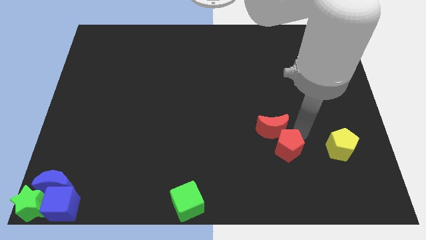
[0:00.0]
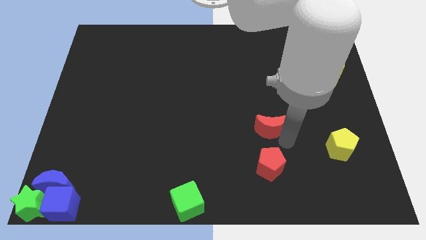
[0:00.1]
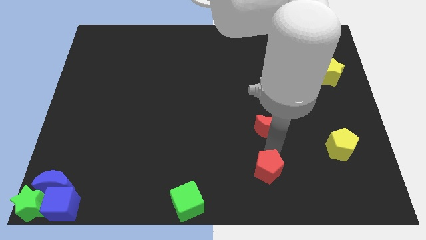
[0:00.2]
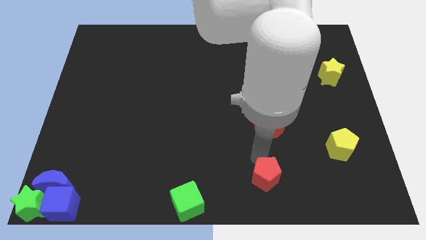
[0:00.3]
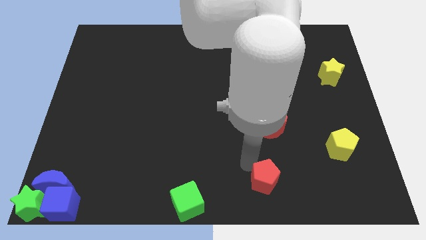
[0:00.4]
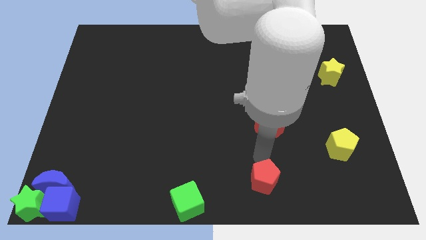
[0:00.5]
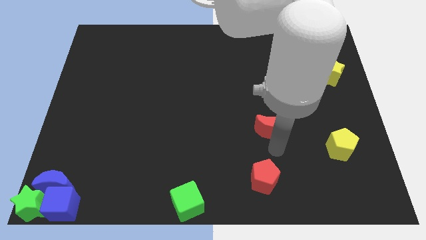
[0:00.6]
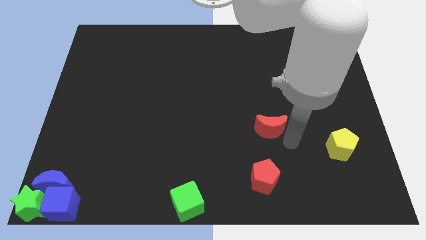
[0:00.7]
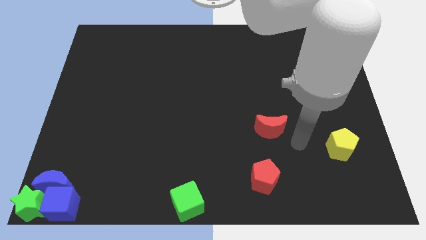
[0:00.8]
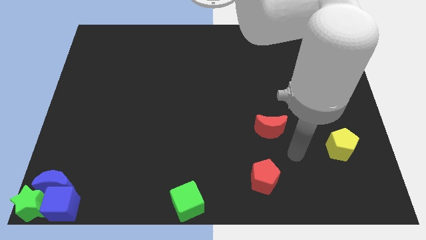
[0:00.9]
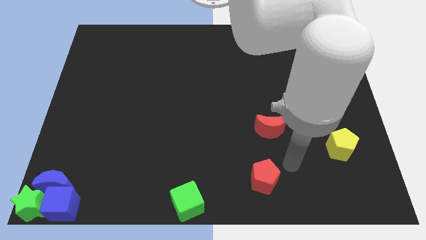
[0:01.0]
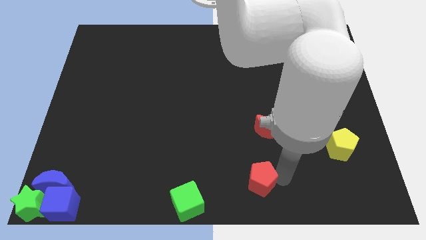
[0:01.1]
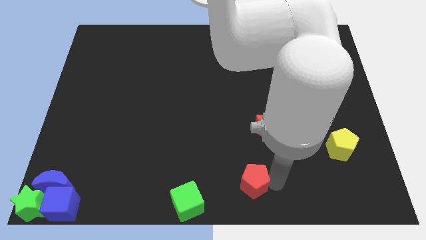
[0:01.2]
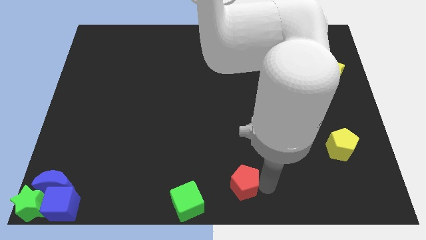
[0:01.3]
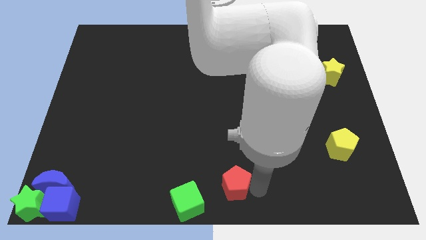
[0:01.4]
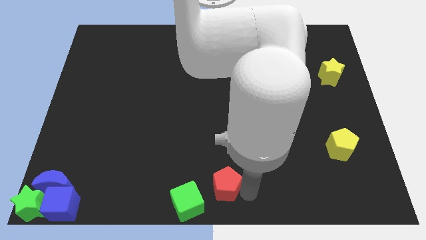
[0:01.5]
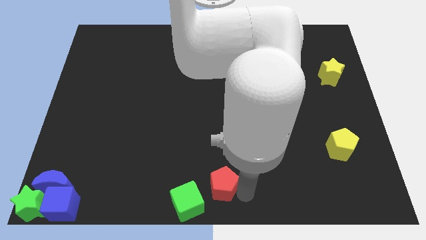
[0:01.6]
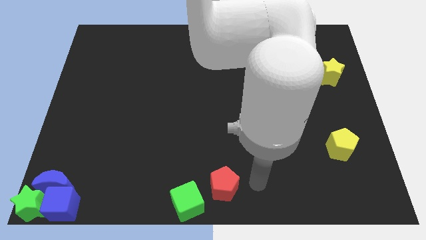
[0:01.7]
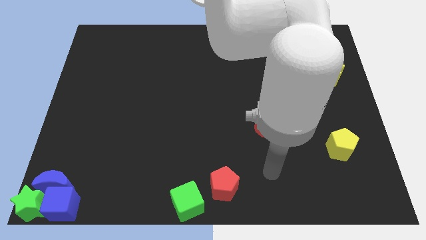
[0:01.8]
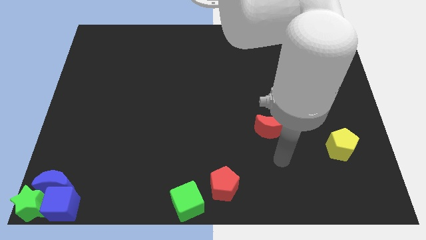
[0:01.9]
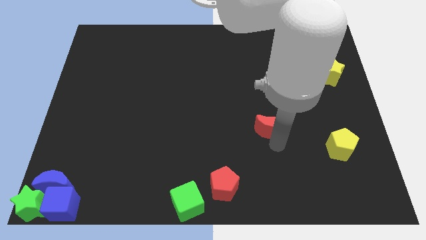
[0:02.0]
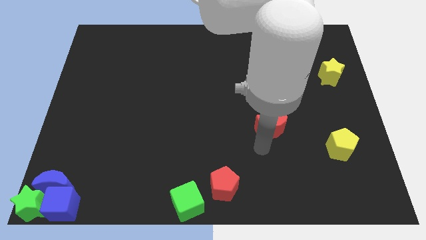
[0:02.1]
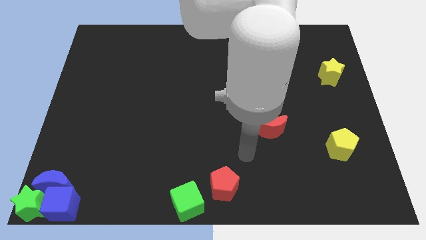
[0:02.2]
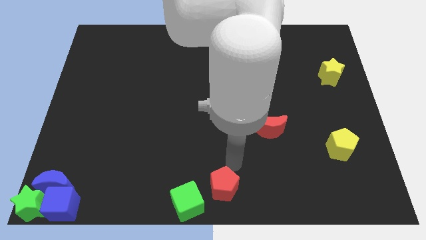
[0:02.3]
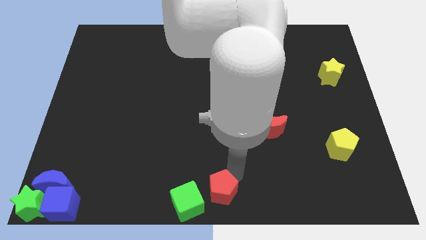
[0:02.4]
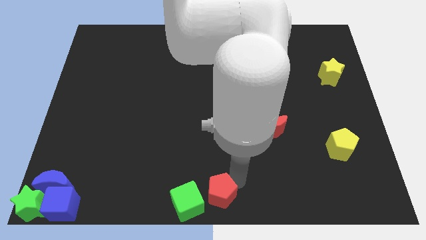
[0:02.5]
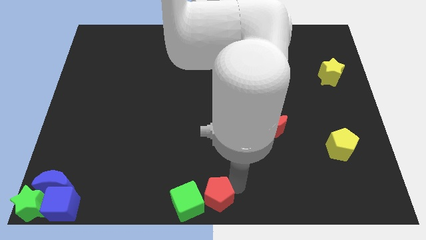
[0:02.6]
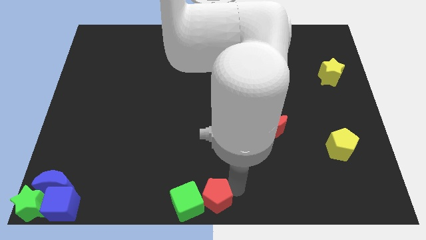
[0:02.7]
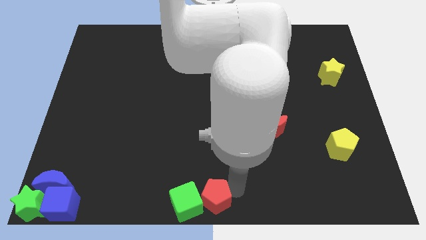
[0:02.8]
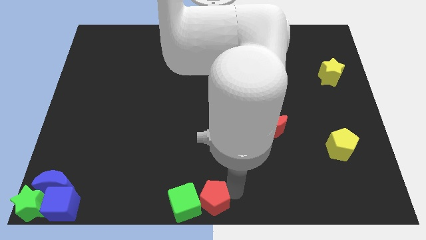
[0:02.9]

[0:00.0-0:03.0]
place the red pentagon right to the green cube

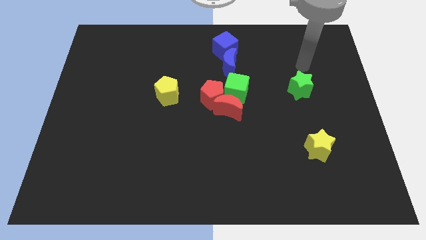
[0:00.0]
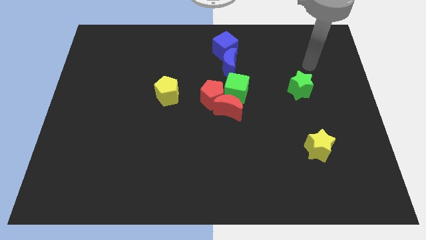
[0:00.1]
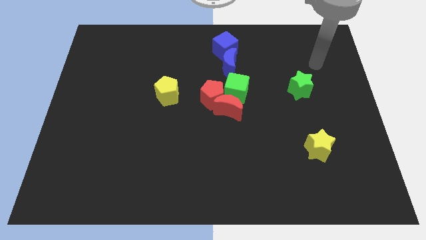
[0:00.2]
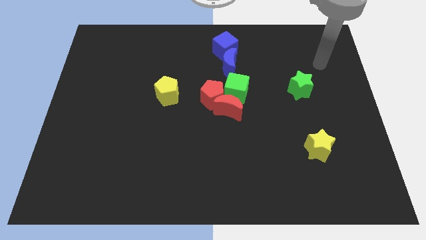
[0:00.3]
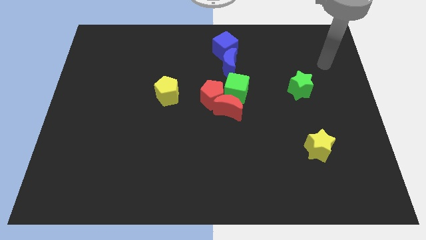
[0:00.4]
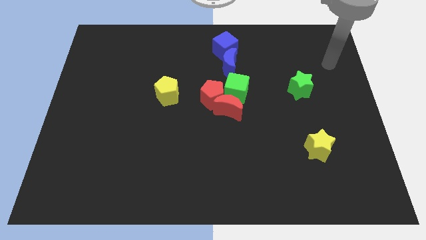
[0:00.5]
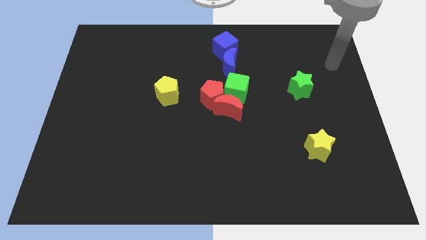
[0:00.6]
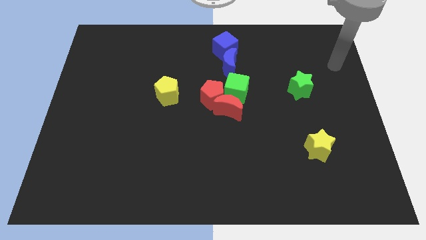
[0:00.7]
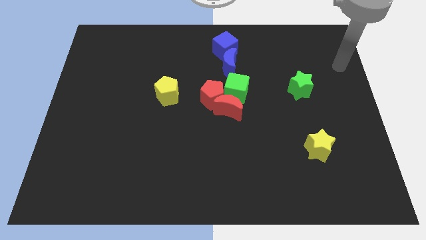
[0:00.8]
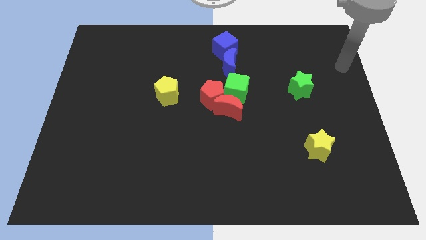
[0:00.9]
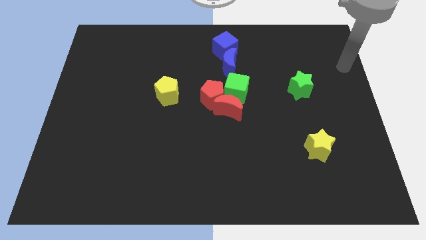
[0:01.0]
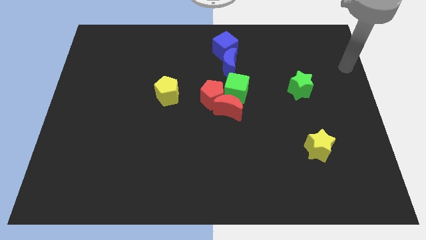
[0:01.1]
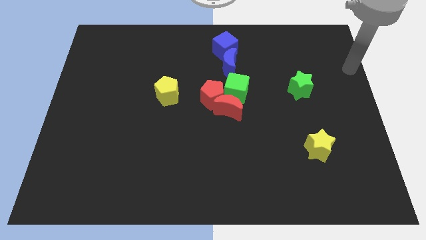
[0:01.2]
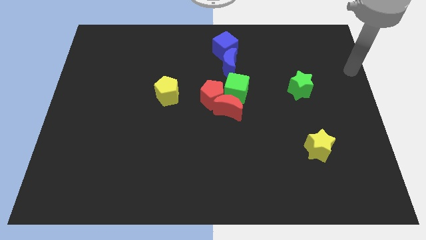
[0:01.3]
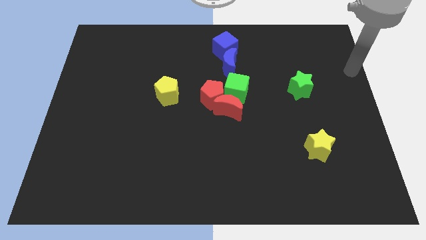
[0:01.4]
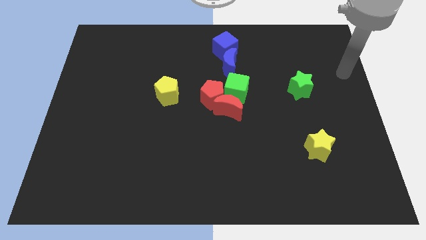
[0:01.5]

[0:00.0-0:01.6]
move the arm to the right side of the board

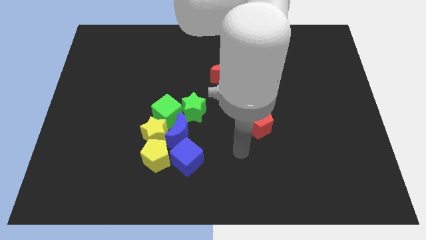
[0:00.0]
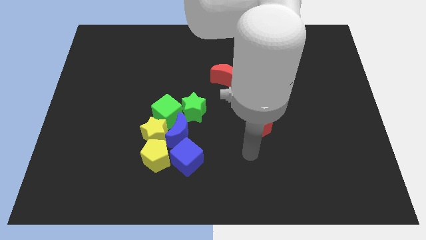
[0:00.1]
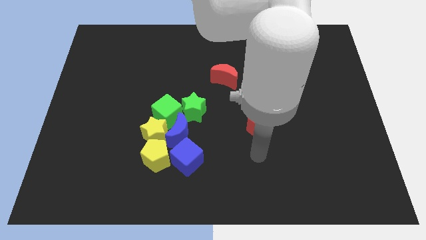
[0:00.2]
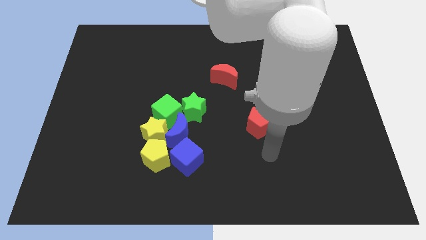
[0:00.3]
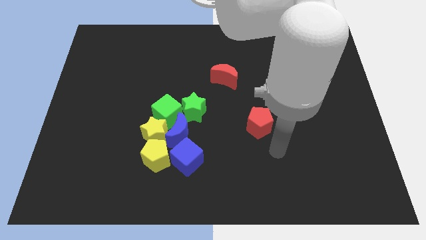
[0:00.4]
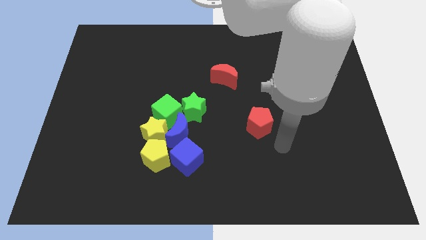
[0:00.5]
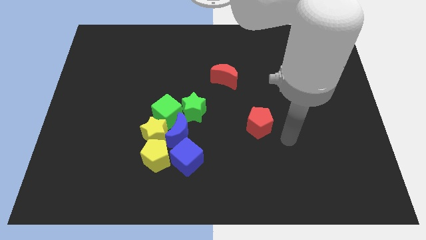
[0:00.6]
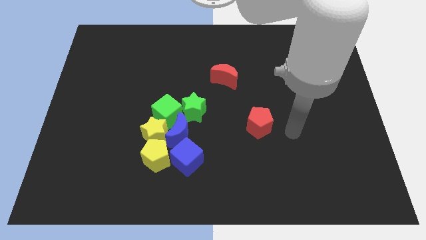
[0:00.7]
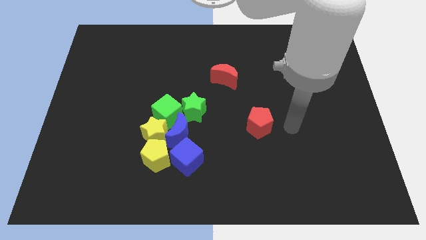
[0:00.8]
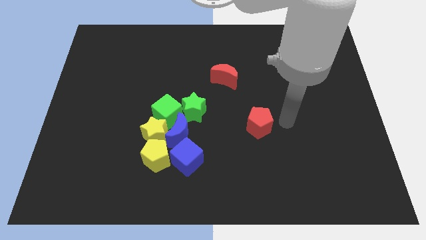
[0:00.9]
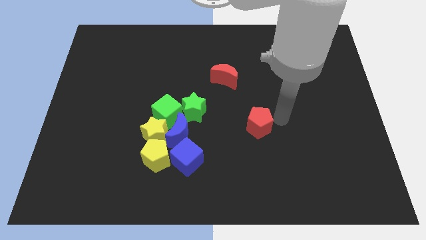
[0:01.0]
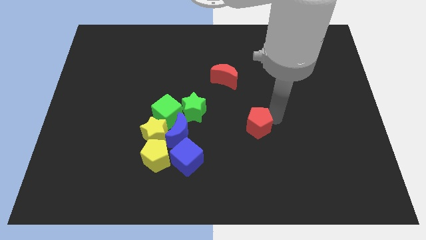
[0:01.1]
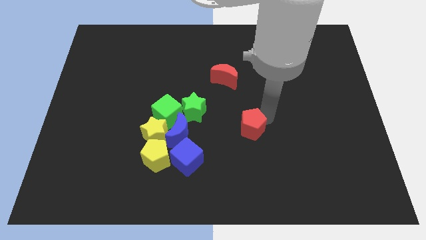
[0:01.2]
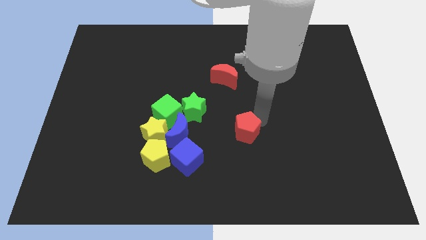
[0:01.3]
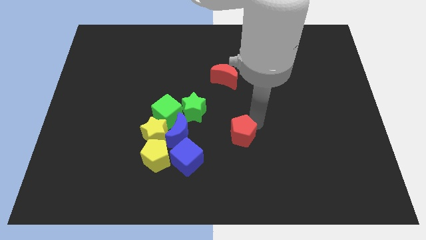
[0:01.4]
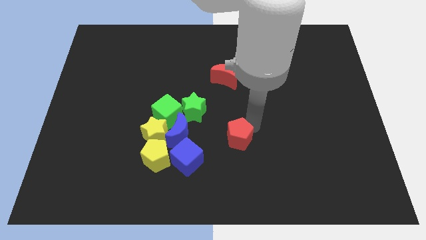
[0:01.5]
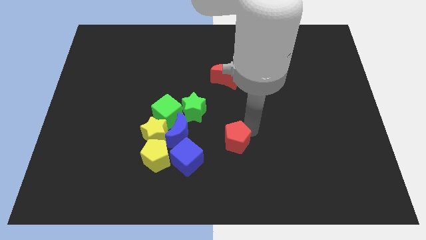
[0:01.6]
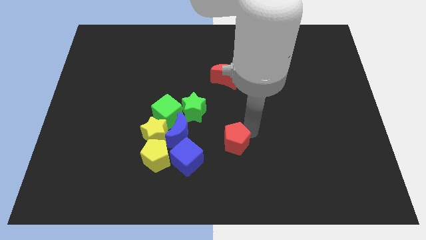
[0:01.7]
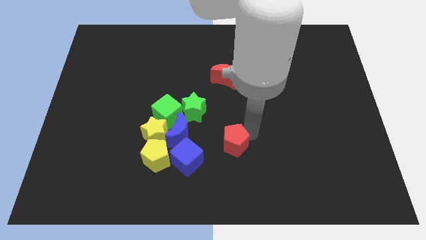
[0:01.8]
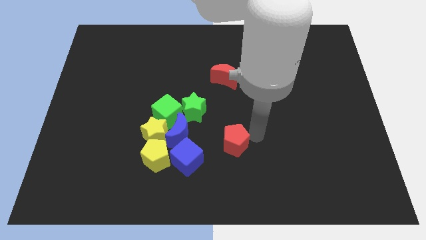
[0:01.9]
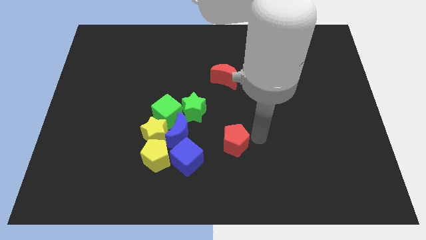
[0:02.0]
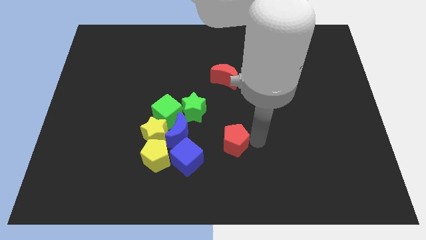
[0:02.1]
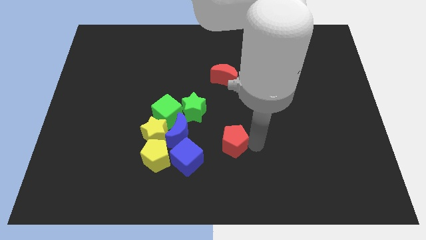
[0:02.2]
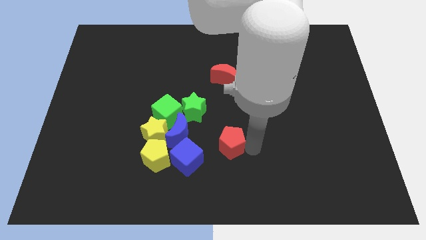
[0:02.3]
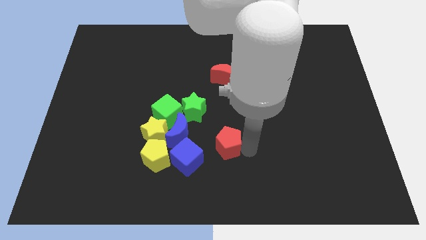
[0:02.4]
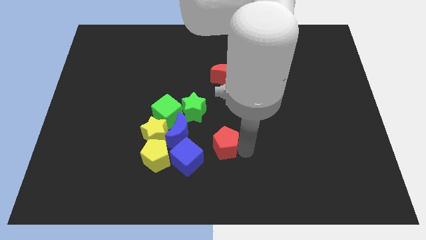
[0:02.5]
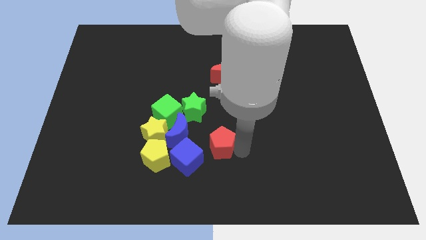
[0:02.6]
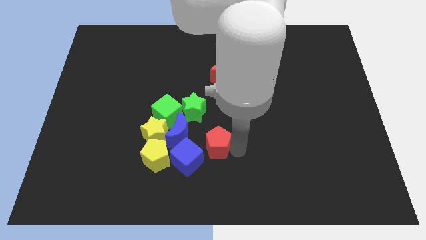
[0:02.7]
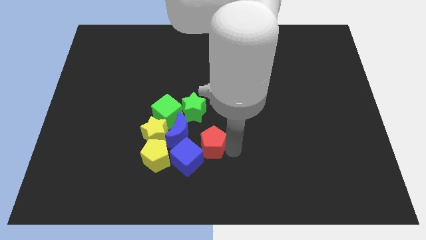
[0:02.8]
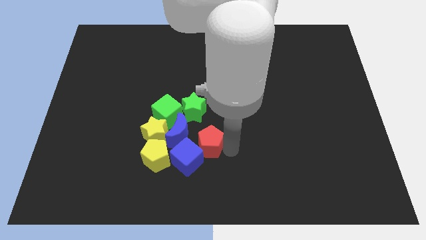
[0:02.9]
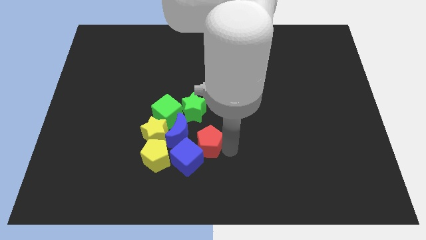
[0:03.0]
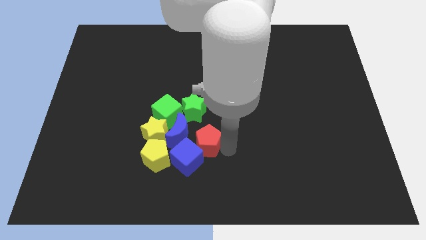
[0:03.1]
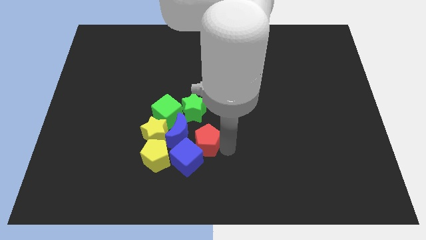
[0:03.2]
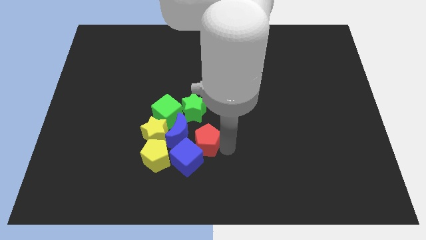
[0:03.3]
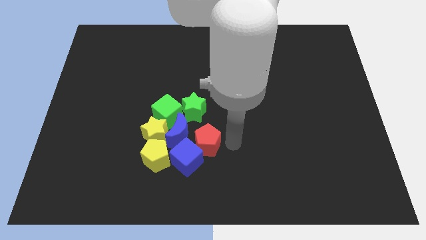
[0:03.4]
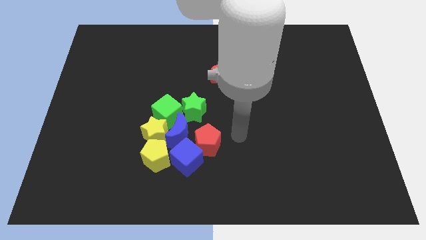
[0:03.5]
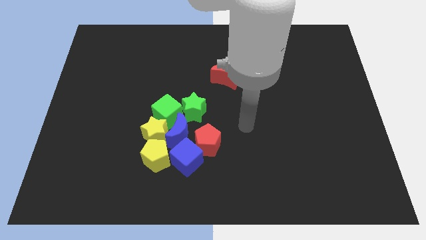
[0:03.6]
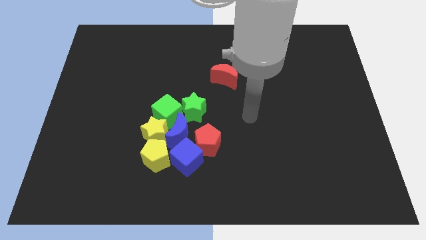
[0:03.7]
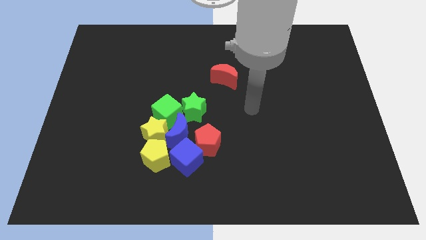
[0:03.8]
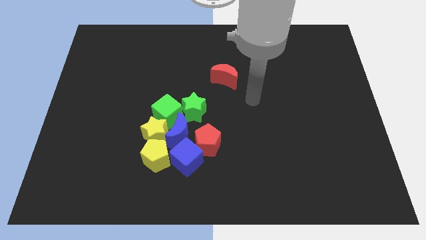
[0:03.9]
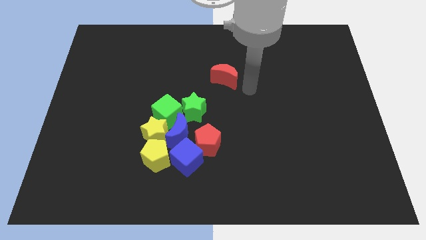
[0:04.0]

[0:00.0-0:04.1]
place the red pentagon into the group of blocks

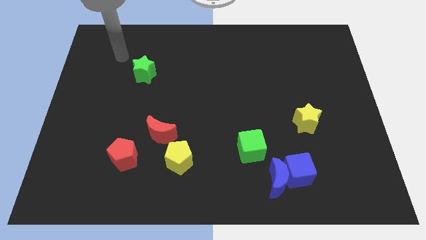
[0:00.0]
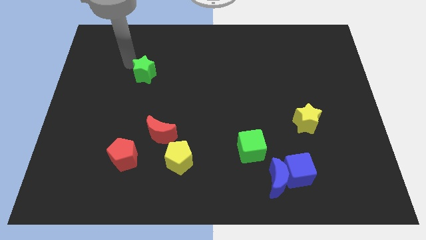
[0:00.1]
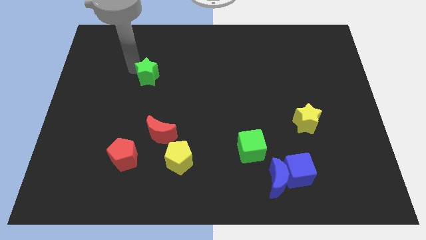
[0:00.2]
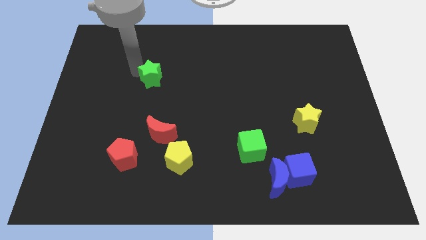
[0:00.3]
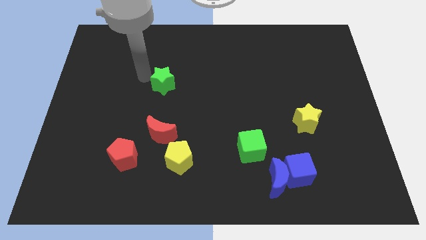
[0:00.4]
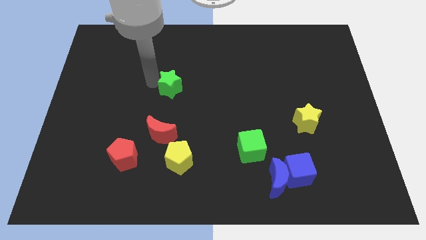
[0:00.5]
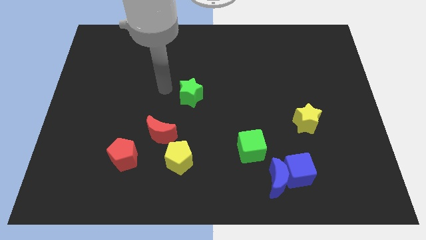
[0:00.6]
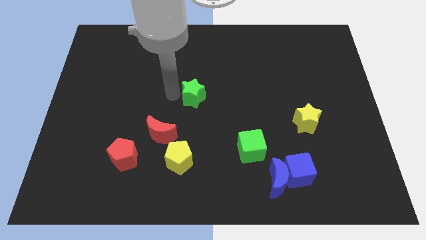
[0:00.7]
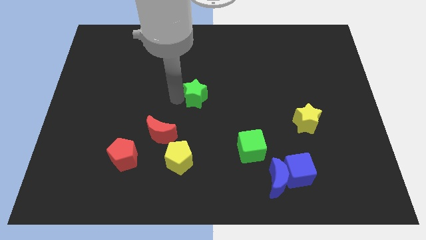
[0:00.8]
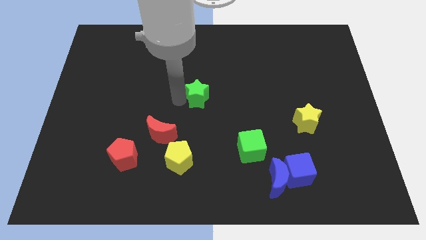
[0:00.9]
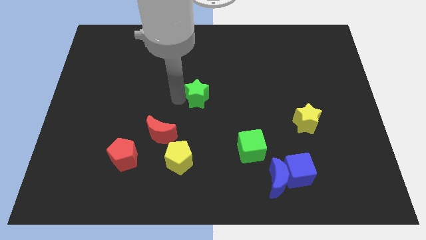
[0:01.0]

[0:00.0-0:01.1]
move the green star to the top right of the red crescent
